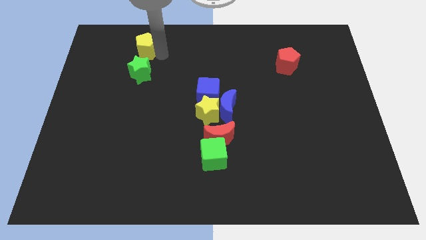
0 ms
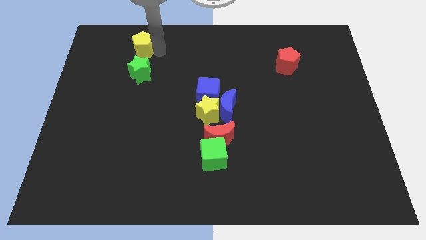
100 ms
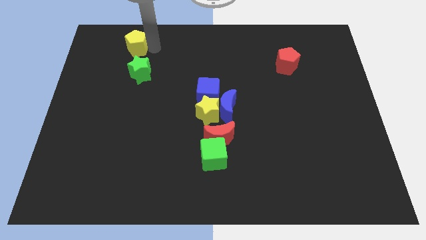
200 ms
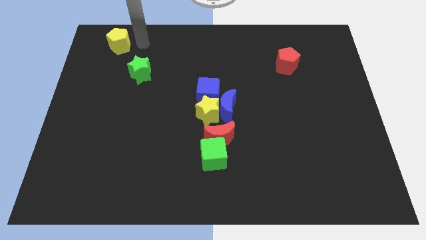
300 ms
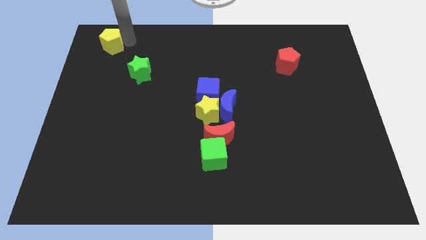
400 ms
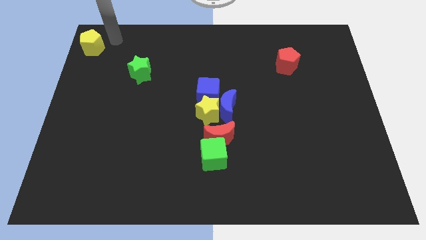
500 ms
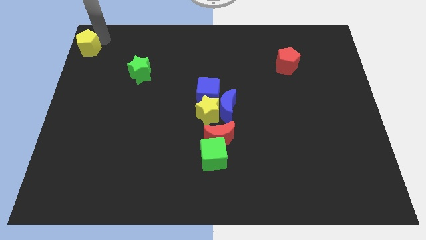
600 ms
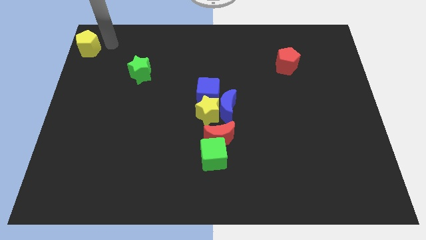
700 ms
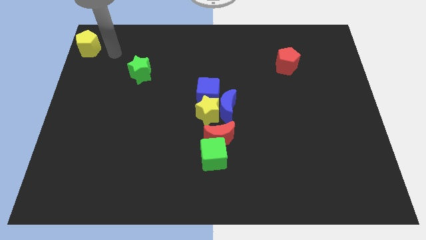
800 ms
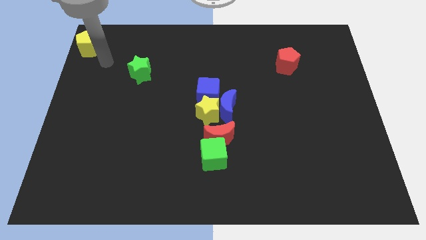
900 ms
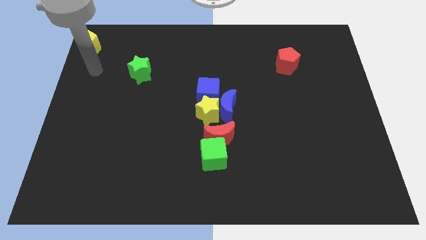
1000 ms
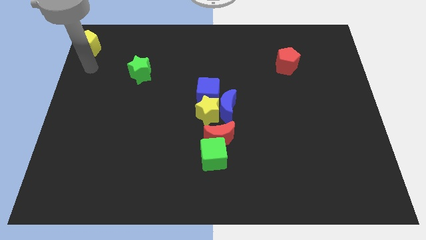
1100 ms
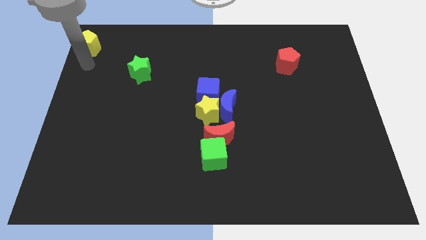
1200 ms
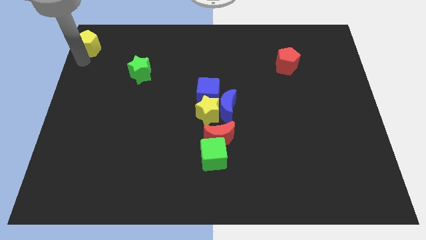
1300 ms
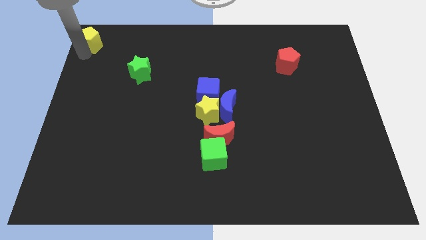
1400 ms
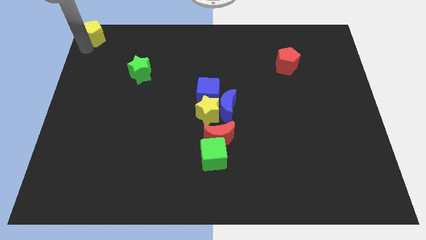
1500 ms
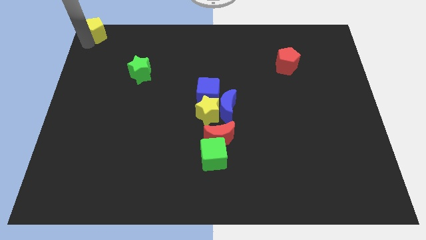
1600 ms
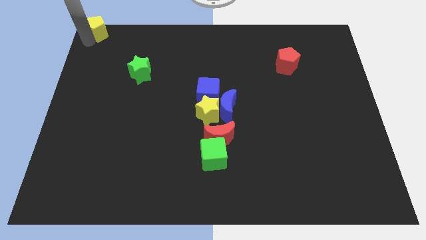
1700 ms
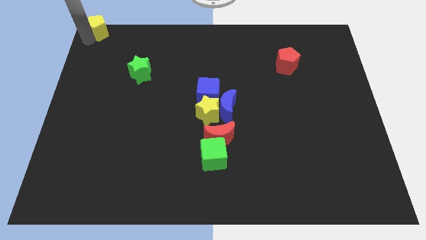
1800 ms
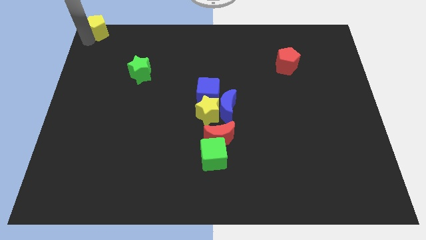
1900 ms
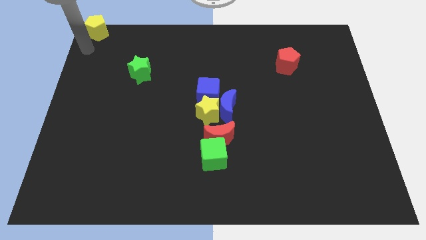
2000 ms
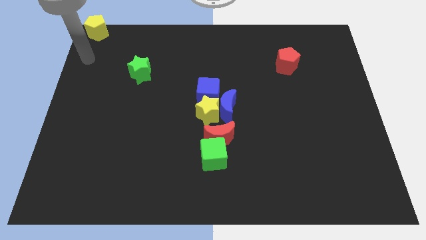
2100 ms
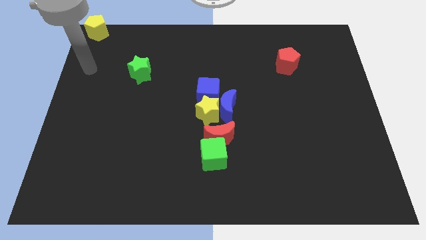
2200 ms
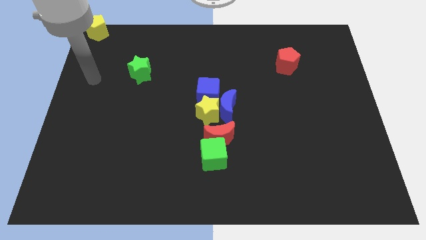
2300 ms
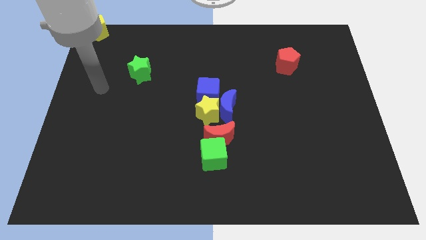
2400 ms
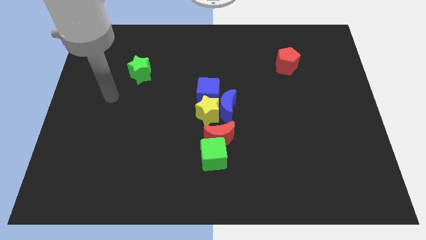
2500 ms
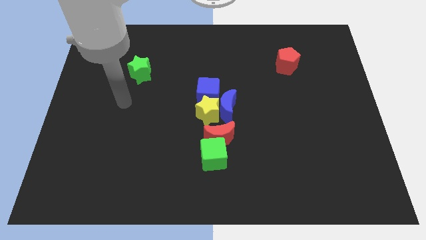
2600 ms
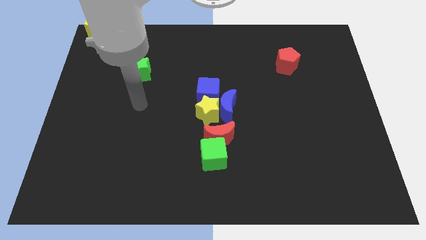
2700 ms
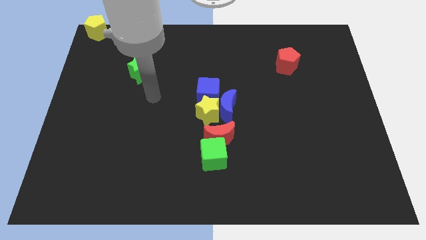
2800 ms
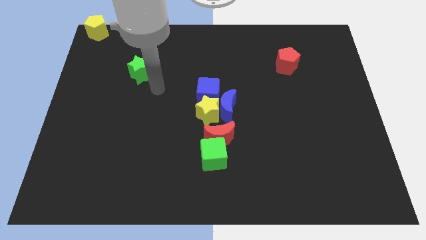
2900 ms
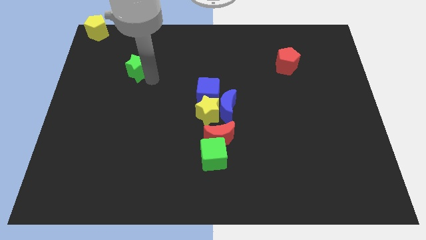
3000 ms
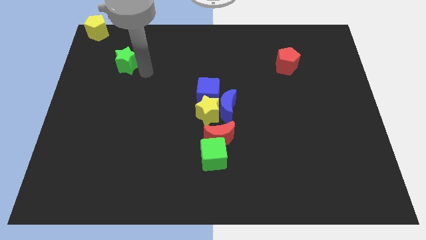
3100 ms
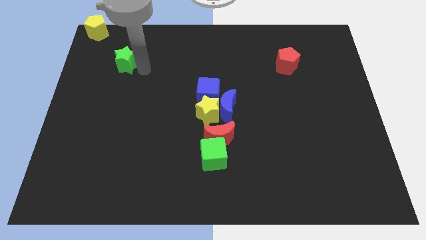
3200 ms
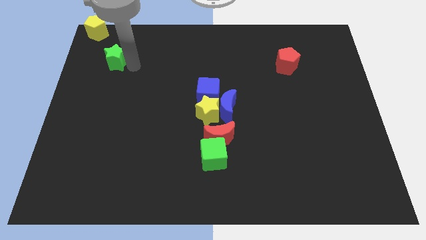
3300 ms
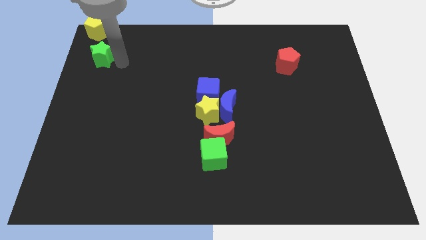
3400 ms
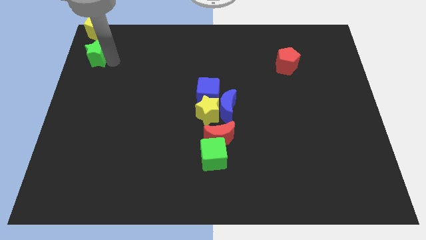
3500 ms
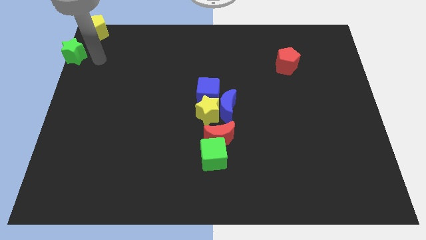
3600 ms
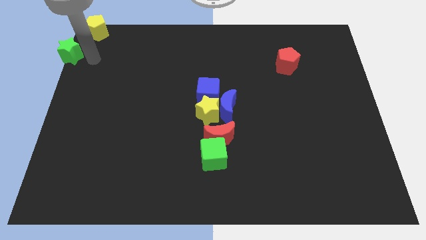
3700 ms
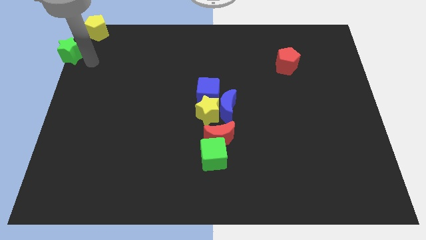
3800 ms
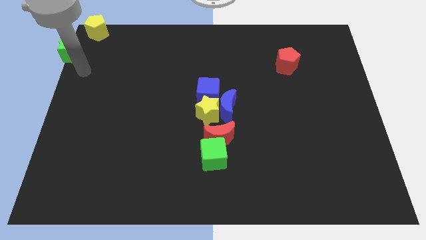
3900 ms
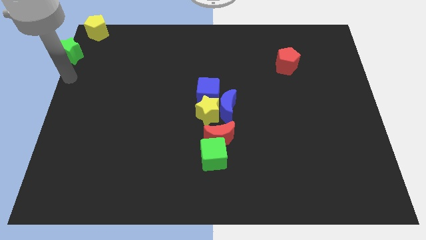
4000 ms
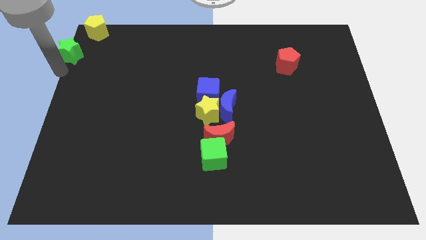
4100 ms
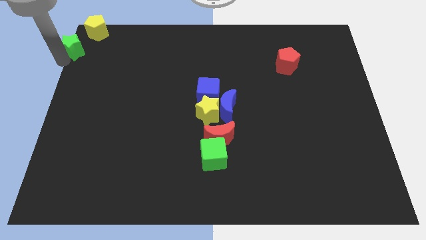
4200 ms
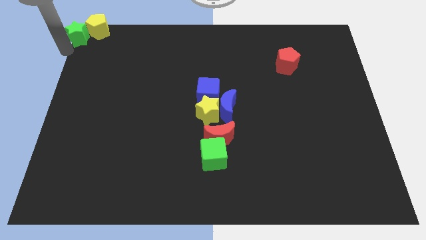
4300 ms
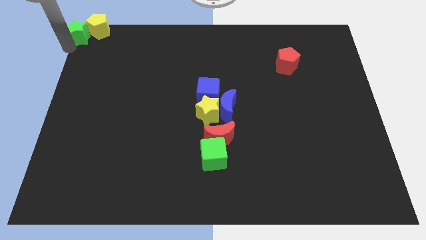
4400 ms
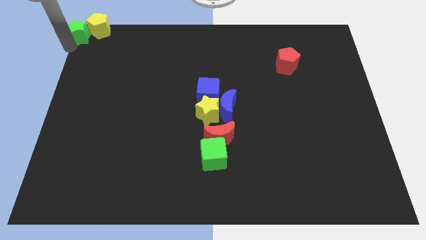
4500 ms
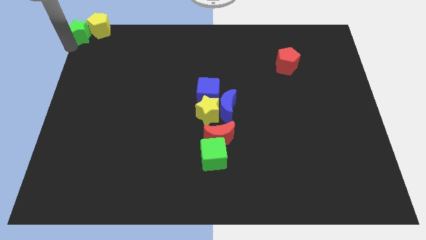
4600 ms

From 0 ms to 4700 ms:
push the yellow pentagongreen star to the top left to the board

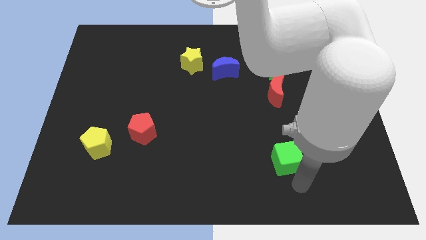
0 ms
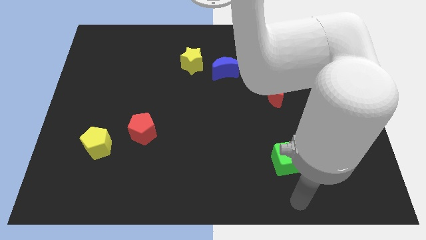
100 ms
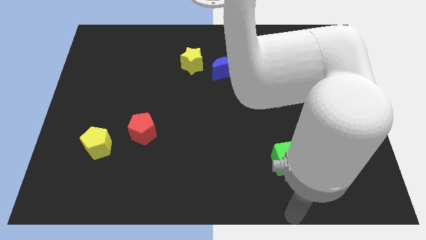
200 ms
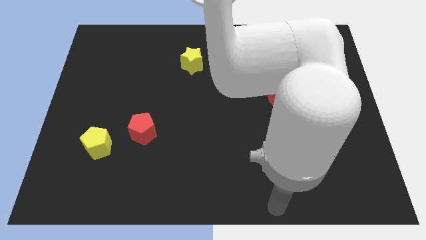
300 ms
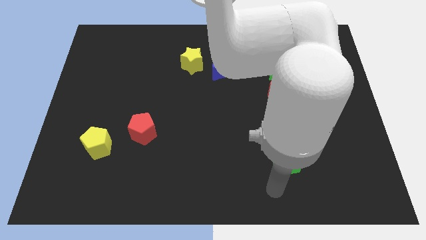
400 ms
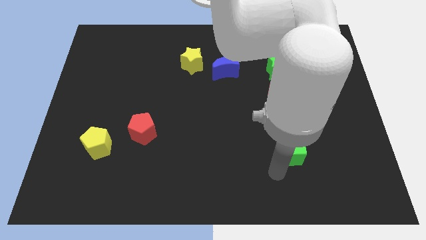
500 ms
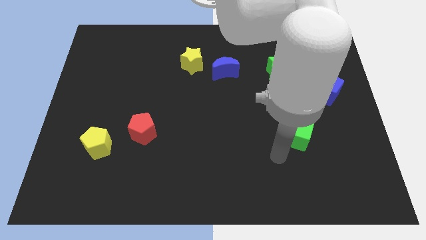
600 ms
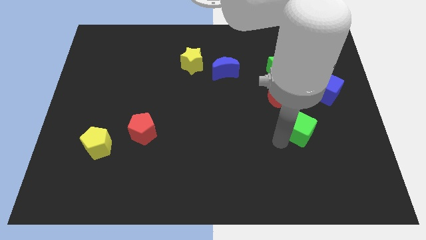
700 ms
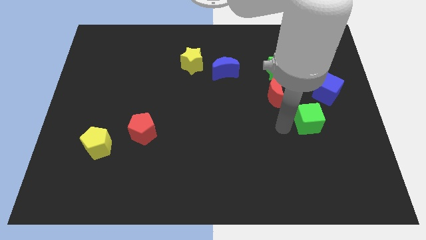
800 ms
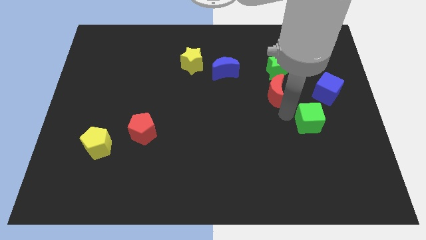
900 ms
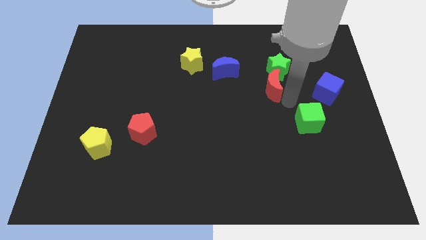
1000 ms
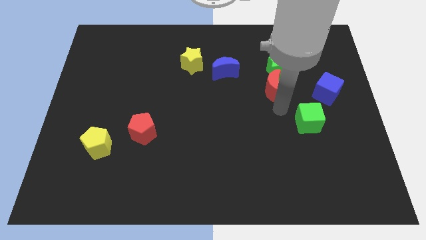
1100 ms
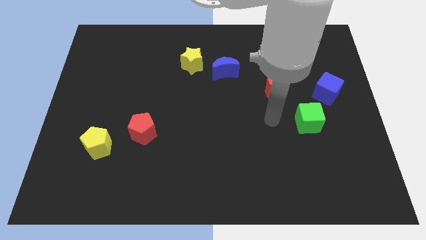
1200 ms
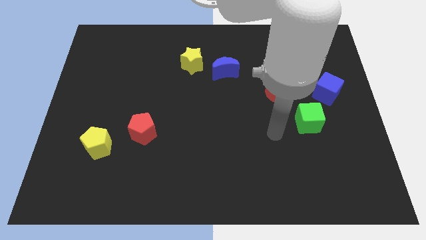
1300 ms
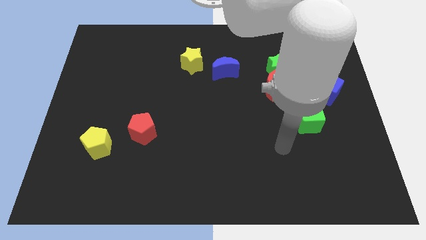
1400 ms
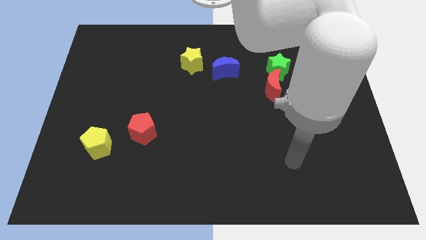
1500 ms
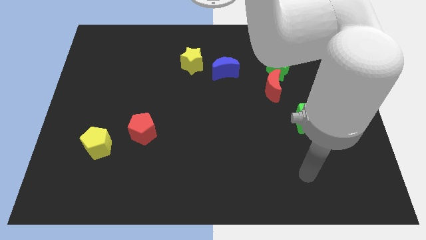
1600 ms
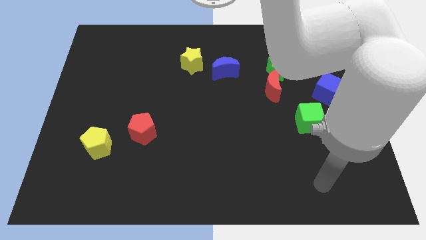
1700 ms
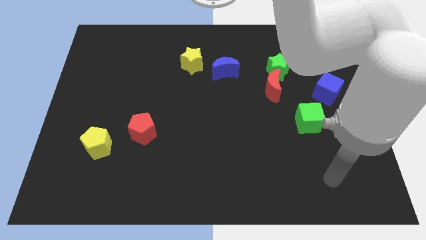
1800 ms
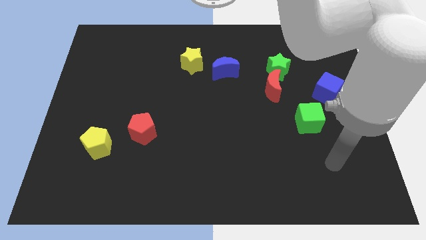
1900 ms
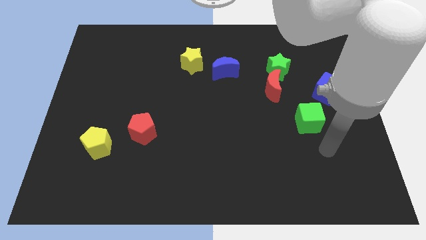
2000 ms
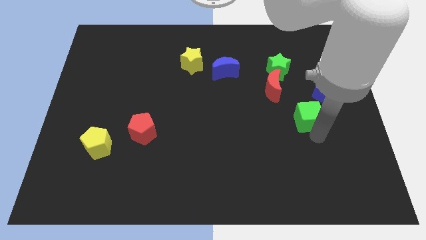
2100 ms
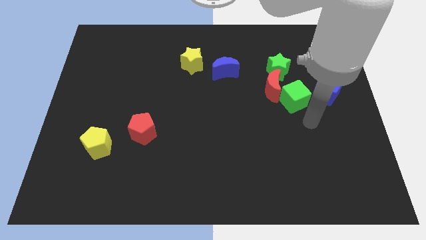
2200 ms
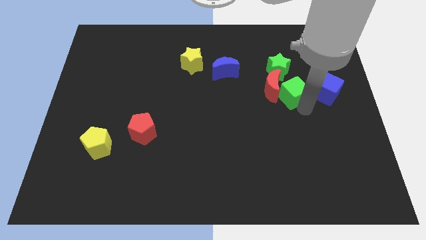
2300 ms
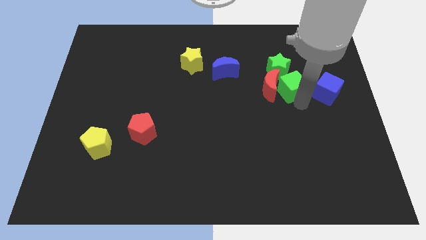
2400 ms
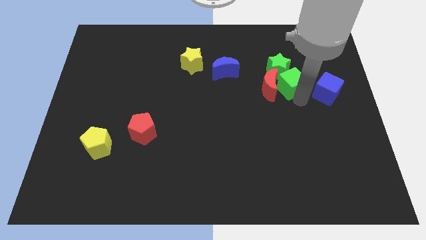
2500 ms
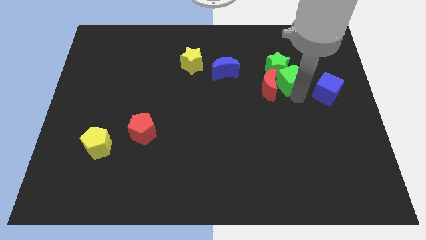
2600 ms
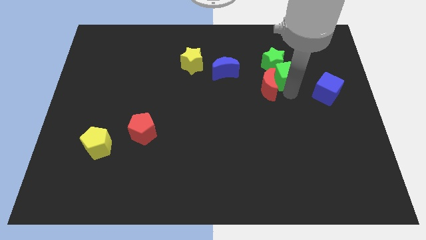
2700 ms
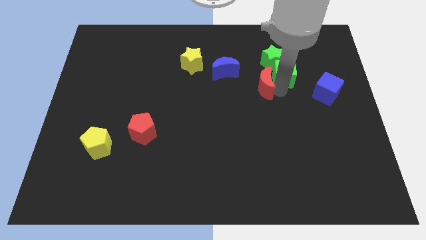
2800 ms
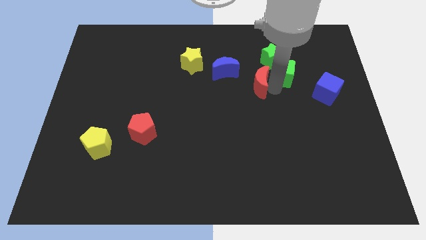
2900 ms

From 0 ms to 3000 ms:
push the green cube into green star

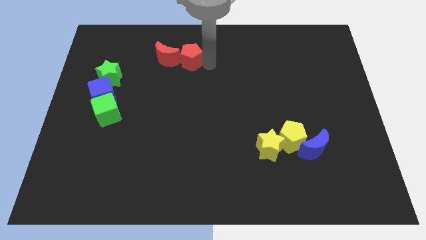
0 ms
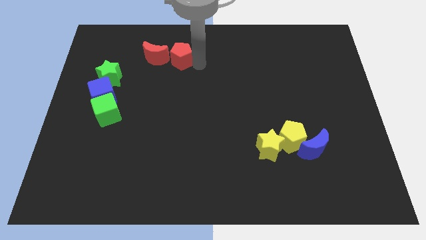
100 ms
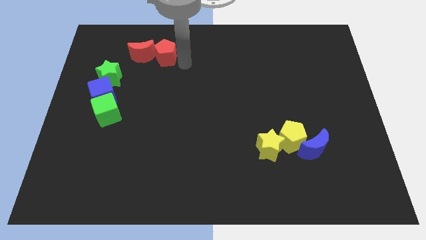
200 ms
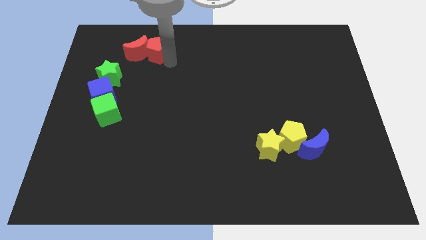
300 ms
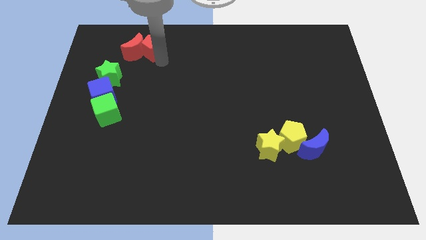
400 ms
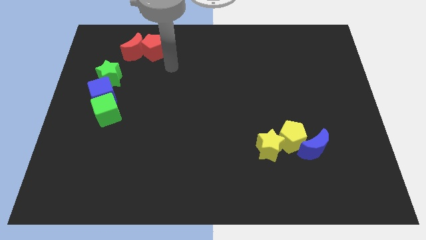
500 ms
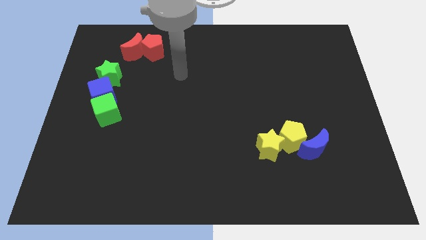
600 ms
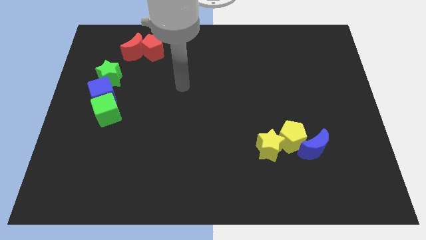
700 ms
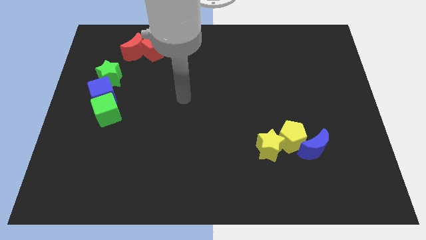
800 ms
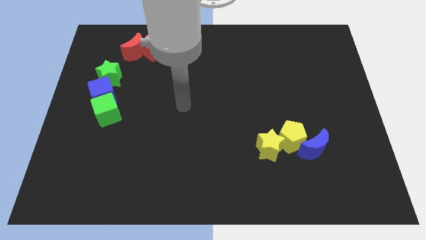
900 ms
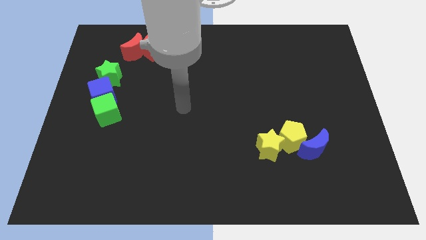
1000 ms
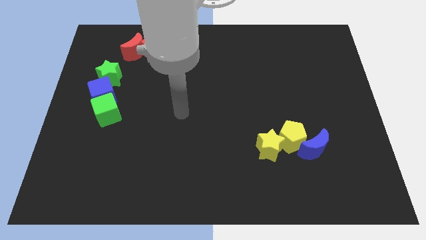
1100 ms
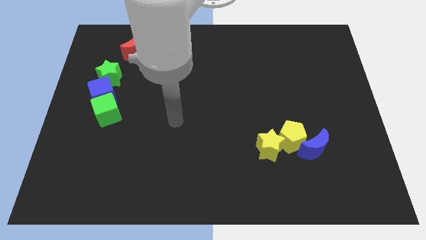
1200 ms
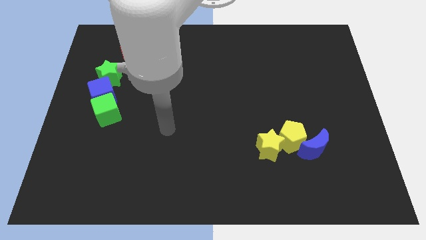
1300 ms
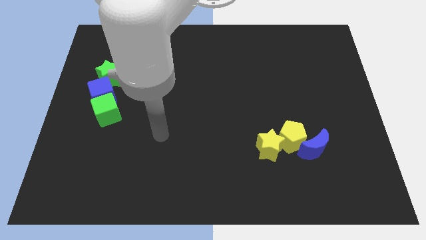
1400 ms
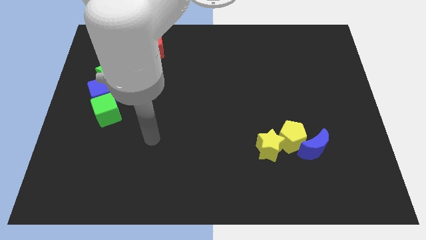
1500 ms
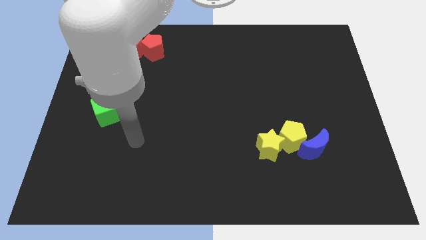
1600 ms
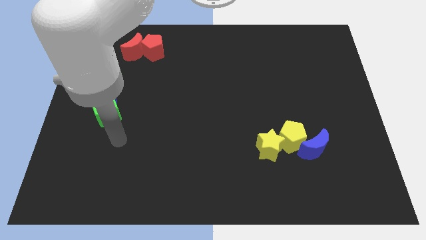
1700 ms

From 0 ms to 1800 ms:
push both the red blocks slightly to the left side of the board
